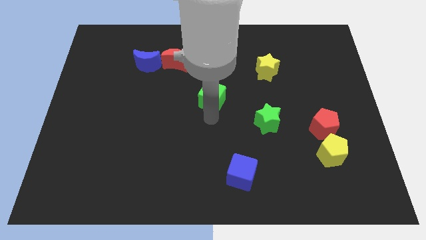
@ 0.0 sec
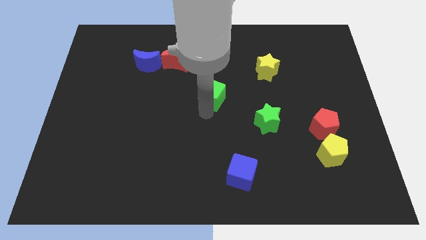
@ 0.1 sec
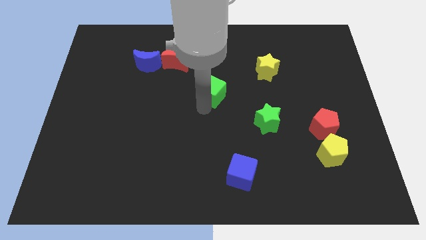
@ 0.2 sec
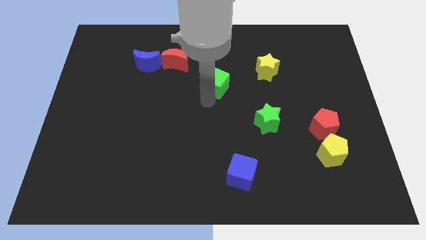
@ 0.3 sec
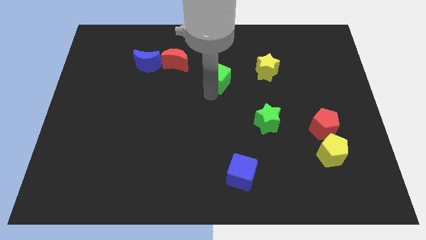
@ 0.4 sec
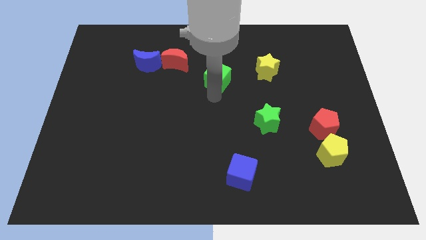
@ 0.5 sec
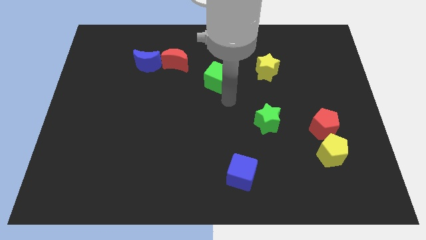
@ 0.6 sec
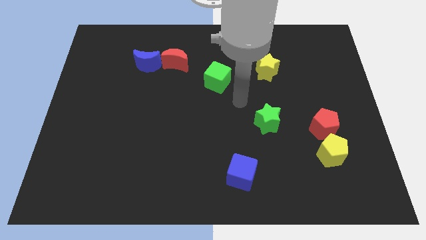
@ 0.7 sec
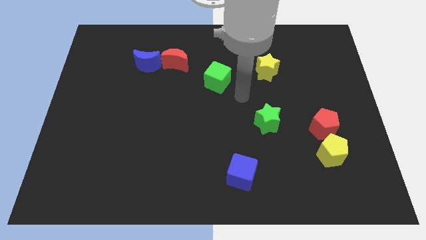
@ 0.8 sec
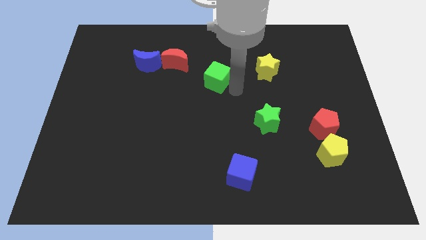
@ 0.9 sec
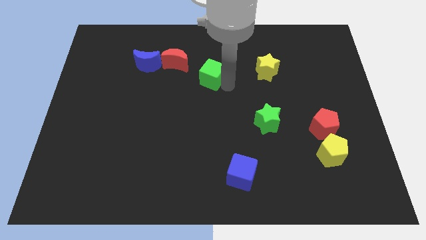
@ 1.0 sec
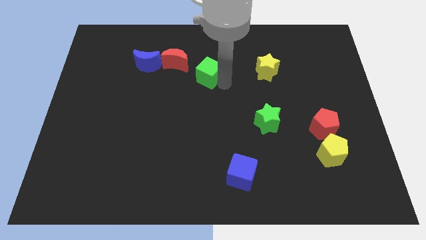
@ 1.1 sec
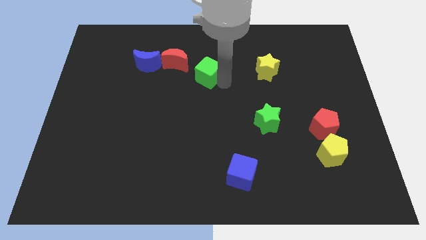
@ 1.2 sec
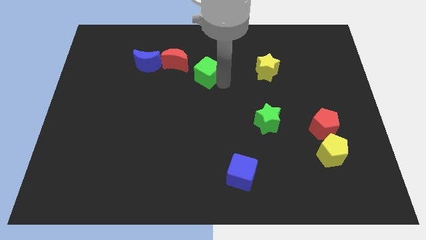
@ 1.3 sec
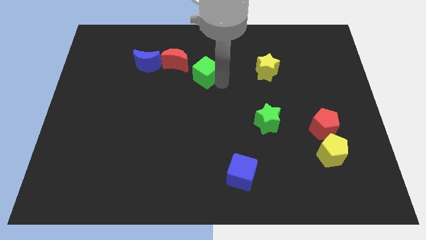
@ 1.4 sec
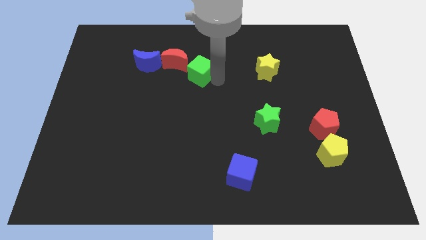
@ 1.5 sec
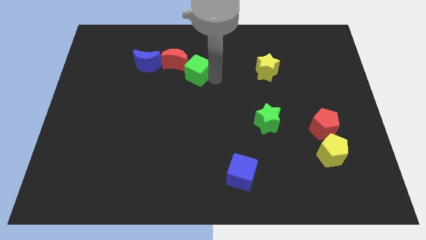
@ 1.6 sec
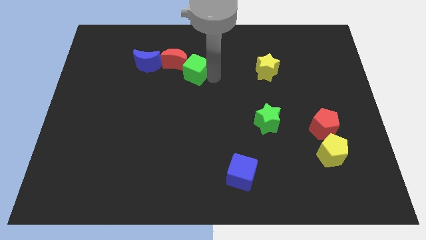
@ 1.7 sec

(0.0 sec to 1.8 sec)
move the green cube into the red crescent

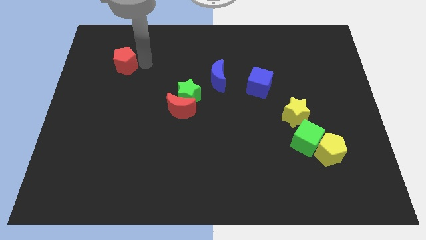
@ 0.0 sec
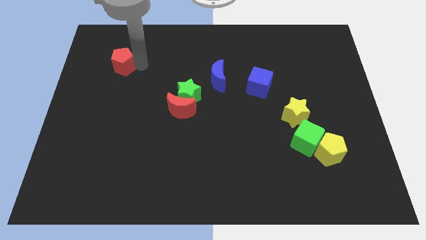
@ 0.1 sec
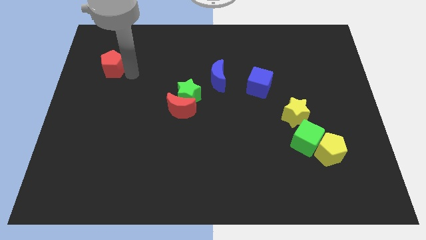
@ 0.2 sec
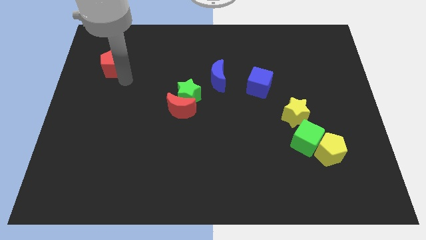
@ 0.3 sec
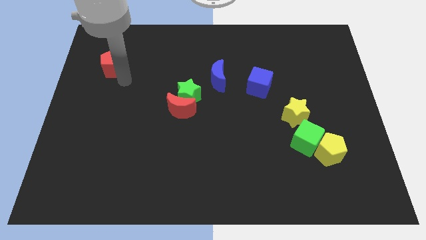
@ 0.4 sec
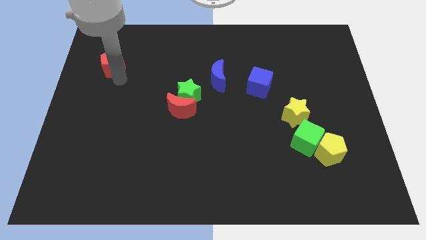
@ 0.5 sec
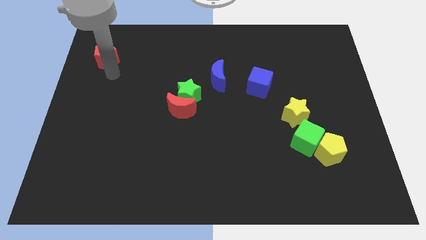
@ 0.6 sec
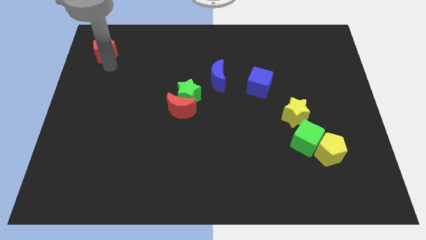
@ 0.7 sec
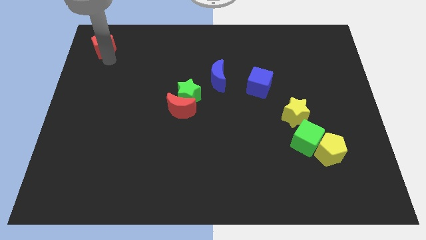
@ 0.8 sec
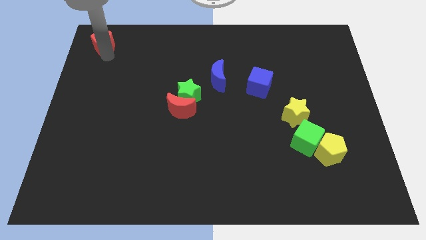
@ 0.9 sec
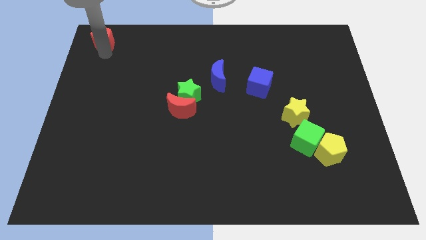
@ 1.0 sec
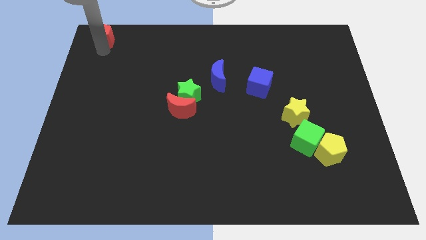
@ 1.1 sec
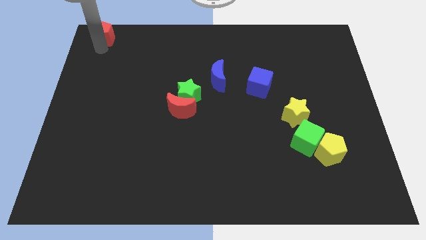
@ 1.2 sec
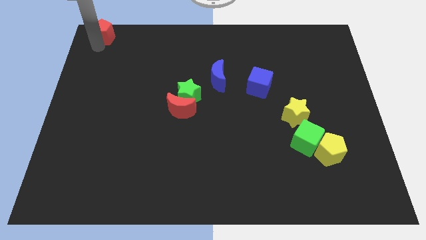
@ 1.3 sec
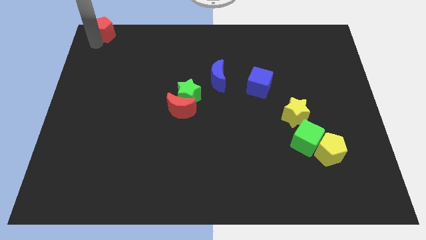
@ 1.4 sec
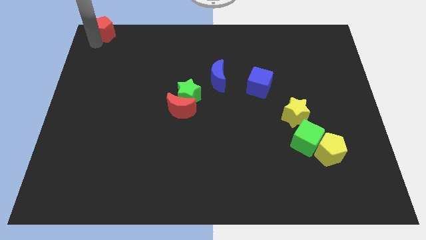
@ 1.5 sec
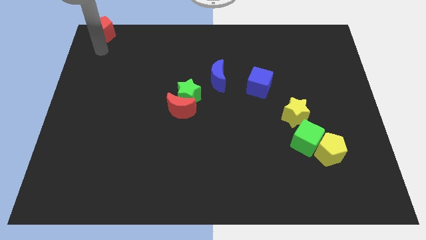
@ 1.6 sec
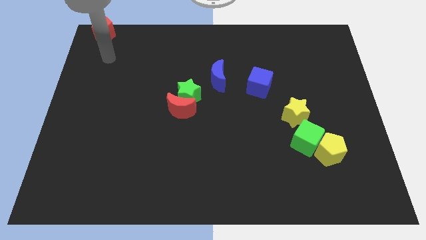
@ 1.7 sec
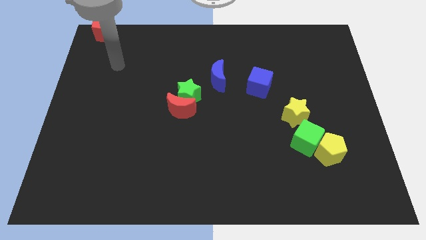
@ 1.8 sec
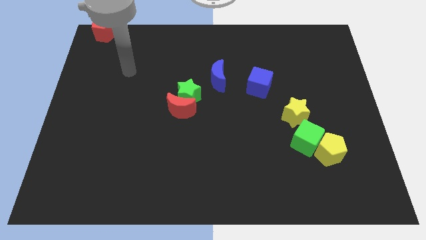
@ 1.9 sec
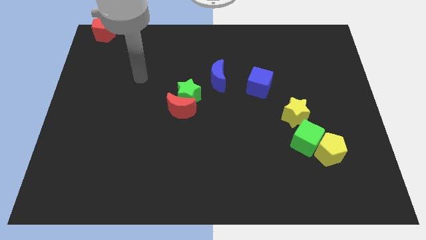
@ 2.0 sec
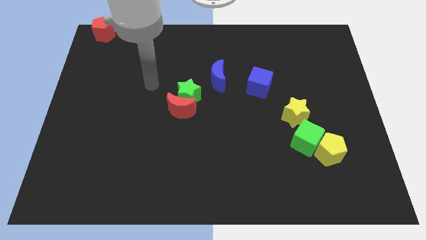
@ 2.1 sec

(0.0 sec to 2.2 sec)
push the red pentagon to the top left corner of the board

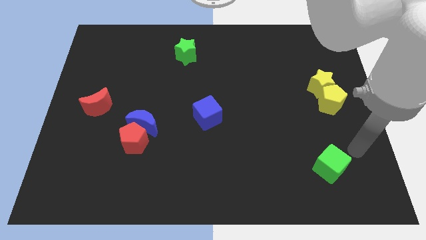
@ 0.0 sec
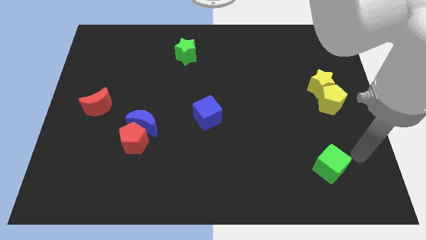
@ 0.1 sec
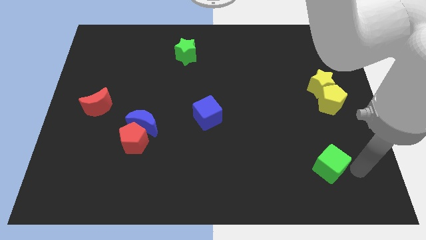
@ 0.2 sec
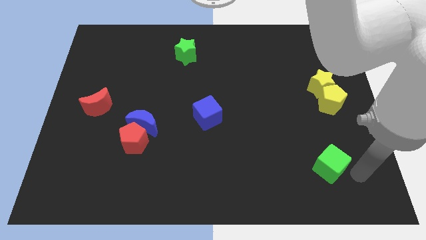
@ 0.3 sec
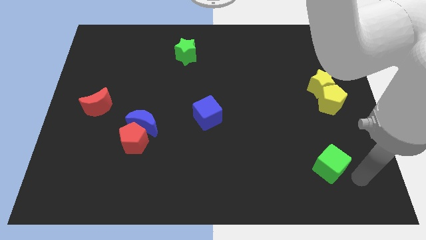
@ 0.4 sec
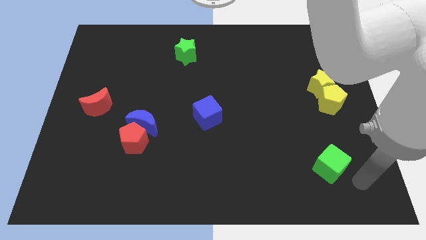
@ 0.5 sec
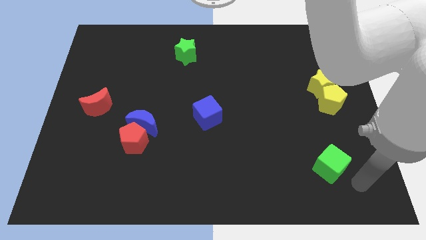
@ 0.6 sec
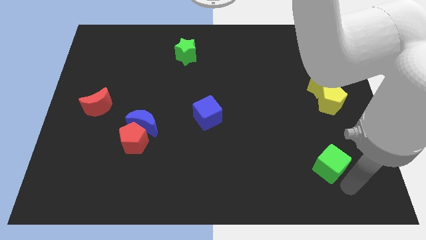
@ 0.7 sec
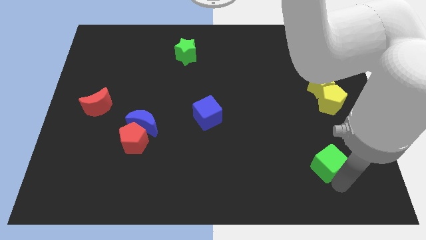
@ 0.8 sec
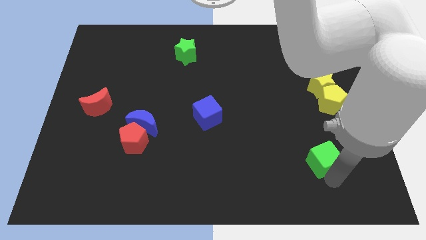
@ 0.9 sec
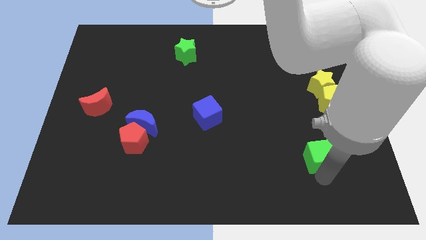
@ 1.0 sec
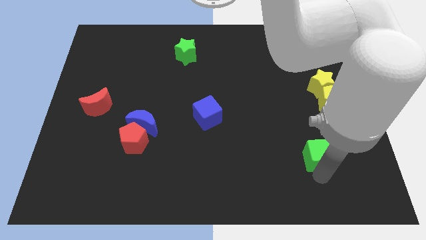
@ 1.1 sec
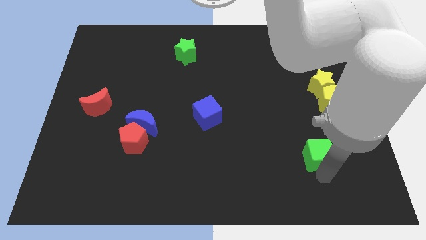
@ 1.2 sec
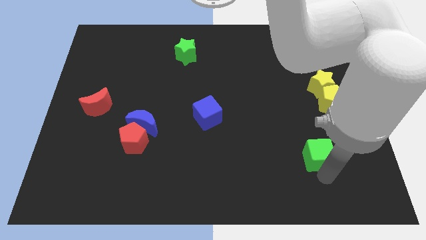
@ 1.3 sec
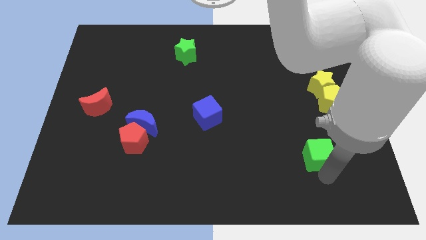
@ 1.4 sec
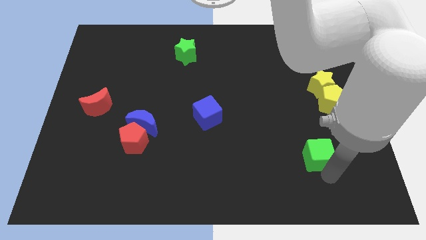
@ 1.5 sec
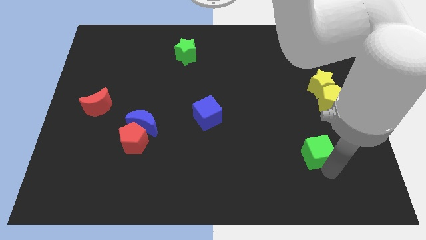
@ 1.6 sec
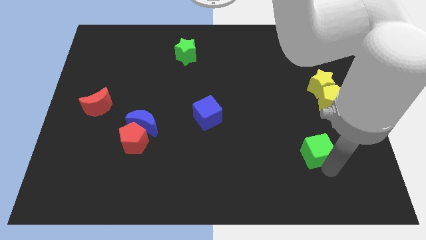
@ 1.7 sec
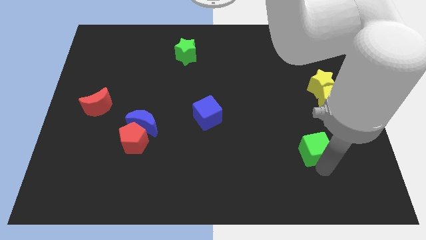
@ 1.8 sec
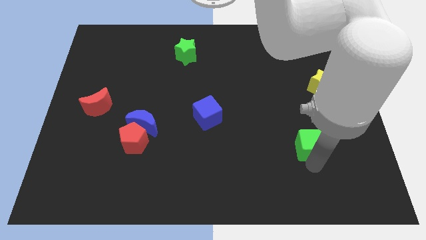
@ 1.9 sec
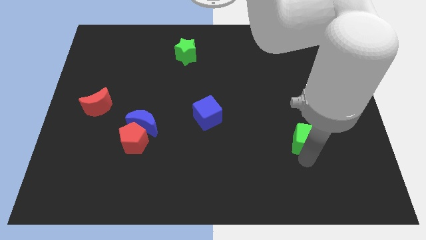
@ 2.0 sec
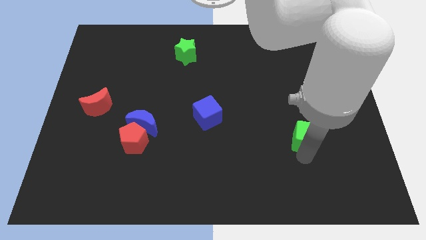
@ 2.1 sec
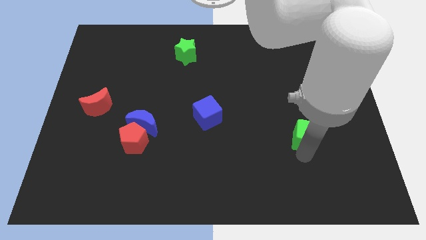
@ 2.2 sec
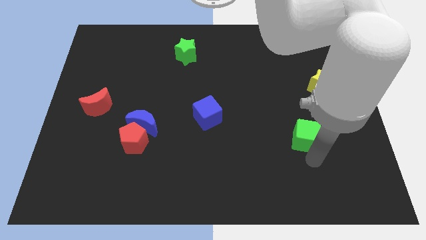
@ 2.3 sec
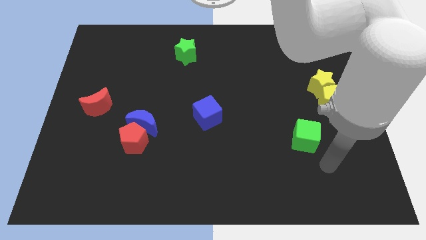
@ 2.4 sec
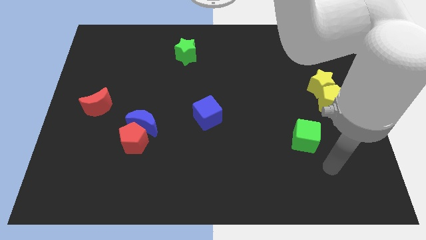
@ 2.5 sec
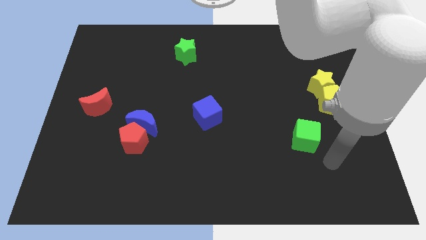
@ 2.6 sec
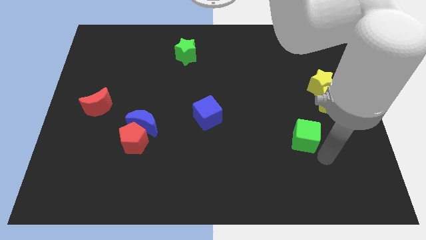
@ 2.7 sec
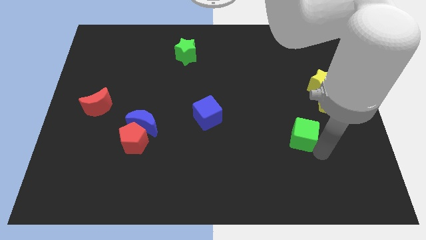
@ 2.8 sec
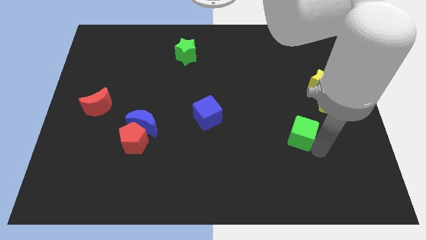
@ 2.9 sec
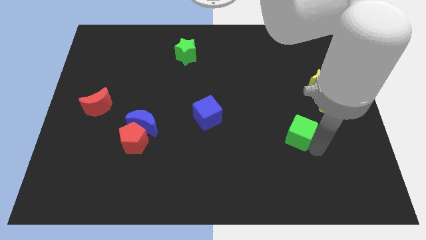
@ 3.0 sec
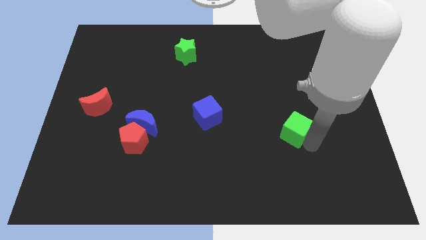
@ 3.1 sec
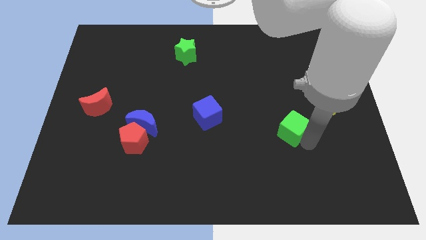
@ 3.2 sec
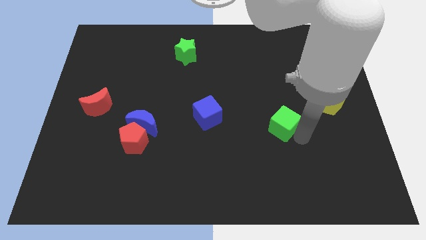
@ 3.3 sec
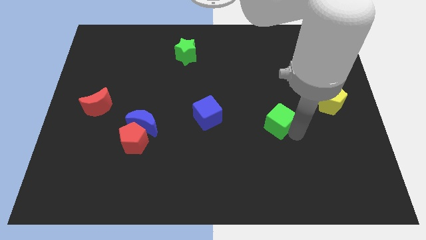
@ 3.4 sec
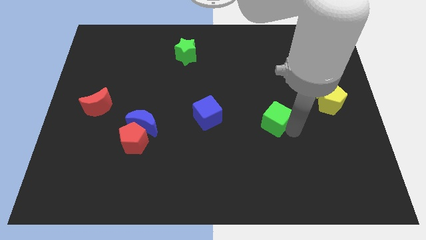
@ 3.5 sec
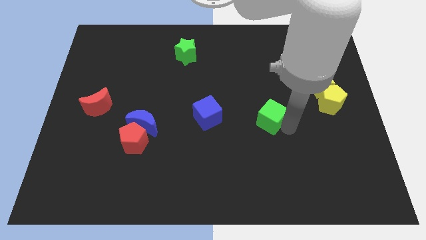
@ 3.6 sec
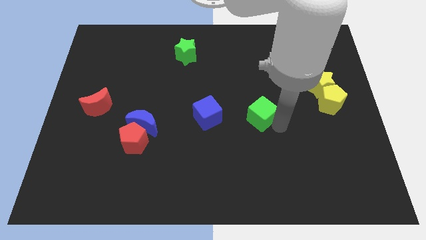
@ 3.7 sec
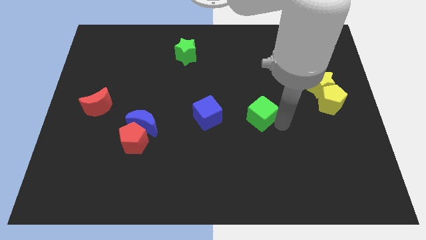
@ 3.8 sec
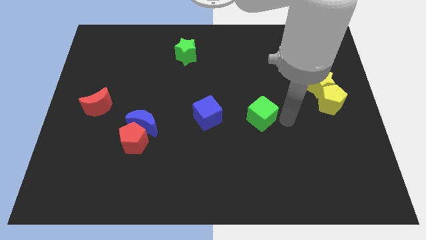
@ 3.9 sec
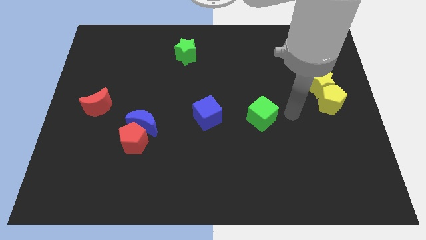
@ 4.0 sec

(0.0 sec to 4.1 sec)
place the green cube to the right of the blue cube

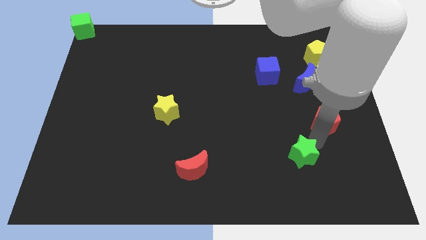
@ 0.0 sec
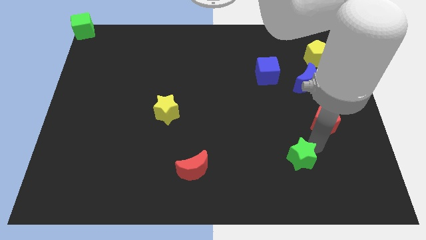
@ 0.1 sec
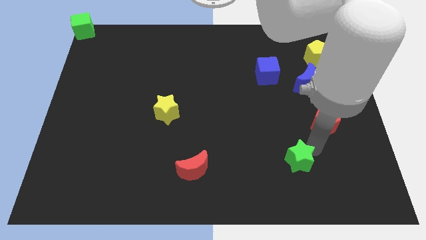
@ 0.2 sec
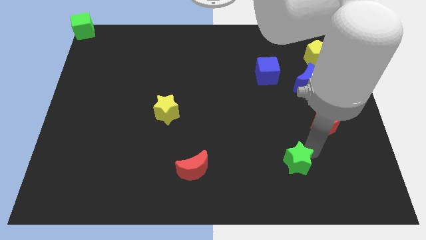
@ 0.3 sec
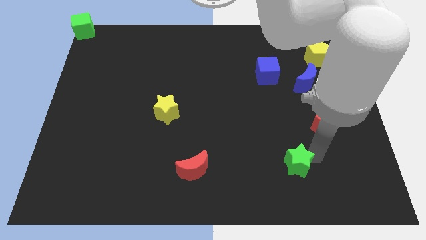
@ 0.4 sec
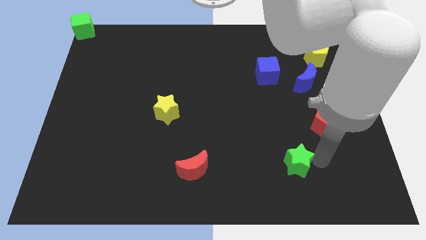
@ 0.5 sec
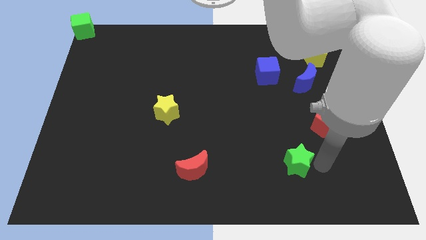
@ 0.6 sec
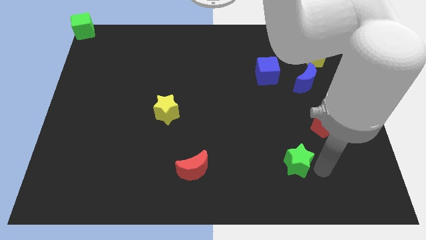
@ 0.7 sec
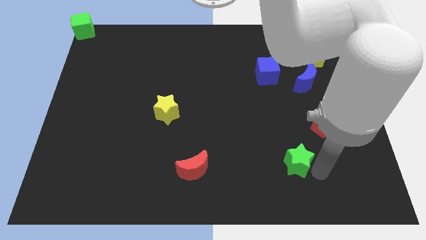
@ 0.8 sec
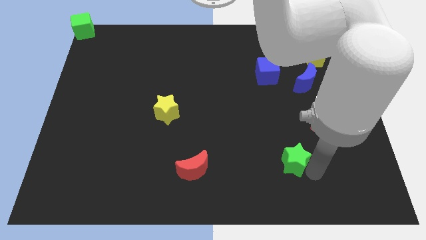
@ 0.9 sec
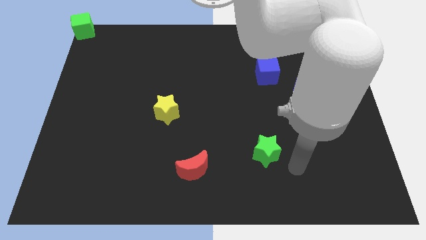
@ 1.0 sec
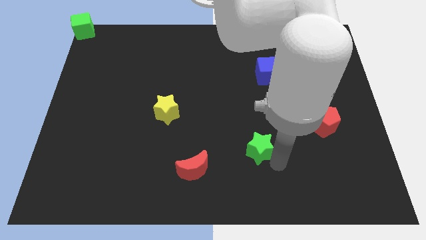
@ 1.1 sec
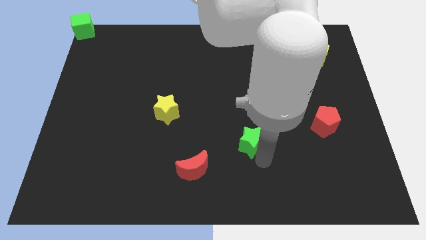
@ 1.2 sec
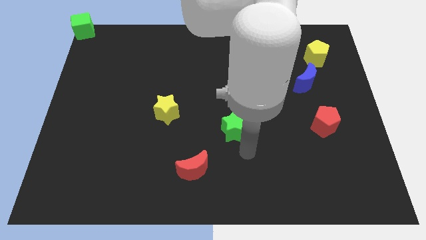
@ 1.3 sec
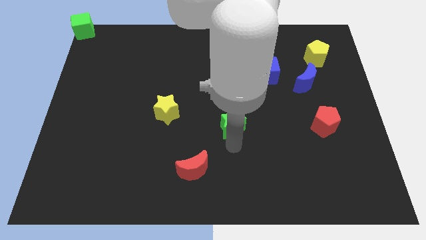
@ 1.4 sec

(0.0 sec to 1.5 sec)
move the green star to the center of the board
